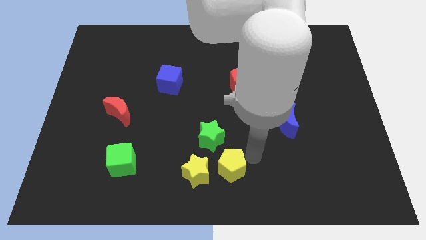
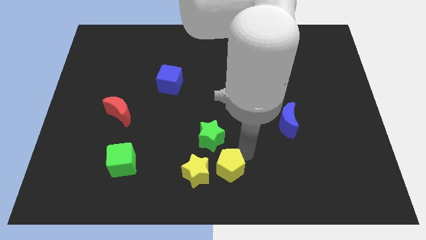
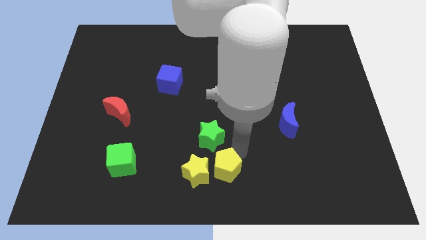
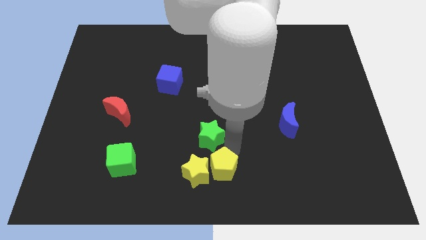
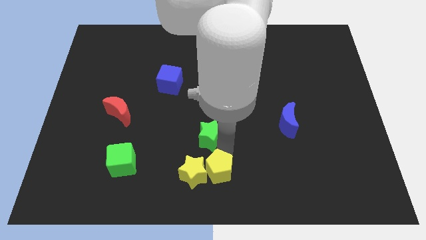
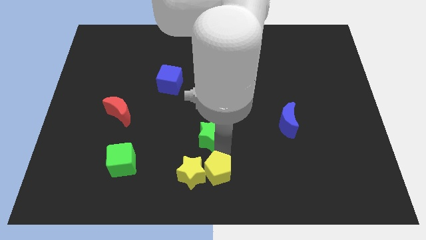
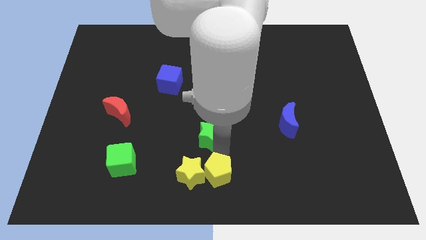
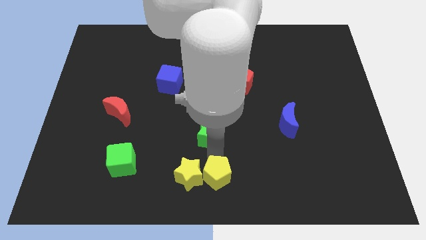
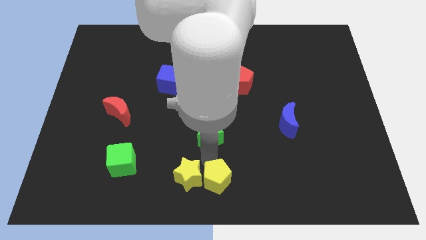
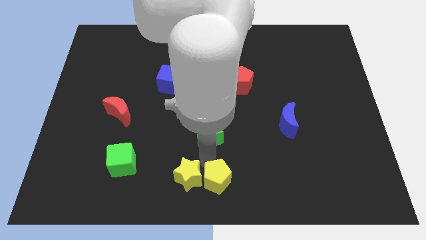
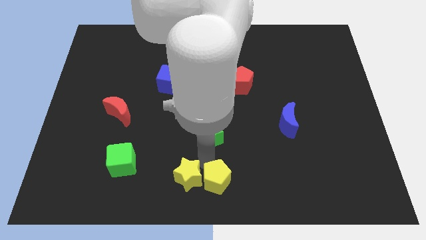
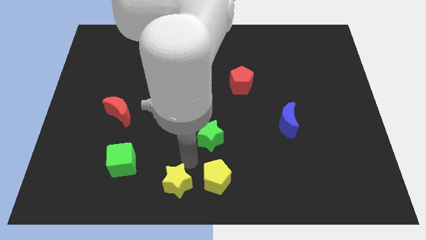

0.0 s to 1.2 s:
move the yellow pentagon into the yellow star

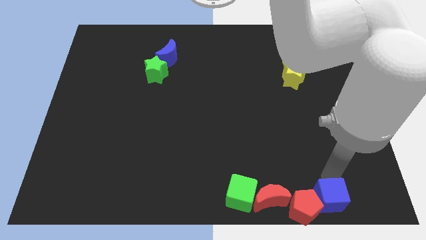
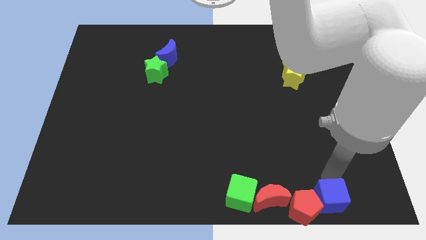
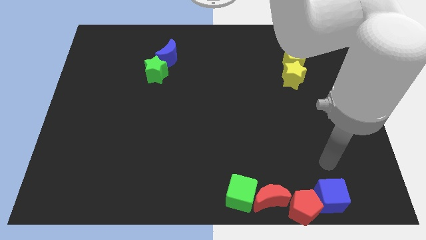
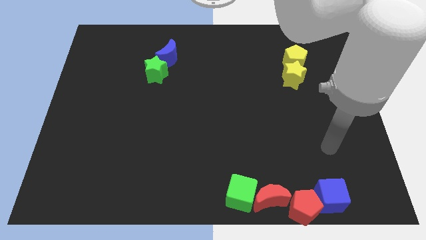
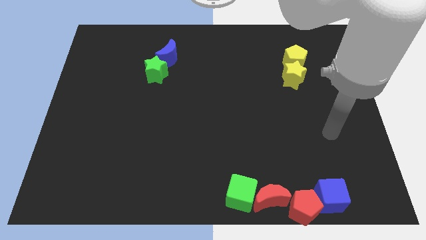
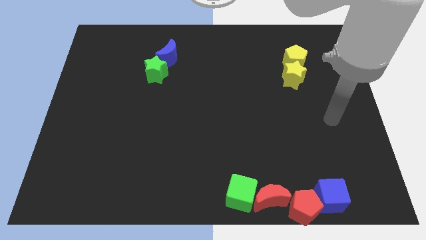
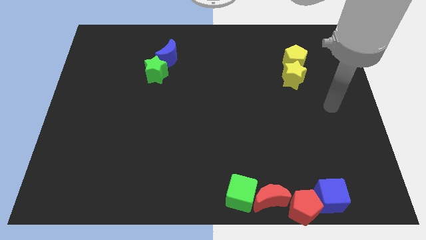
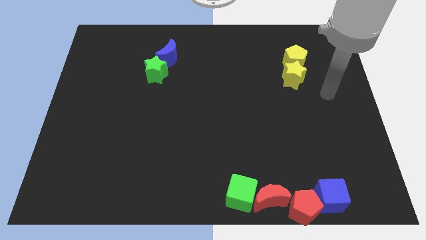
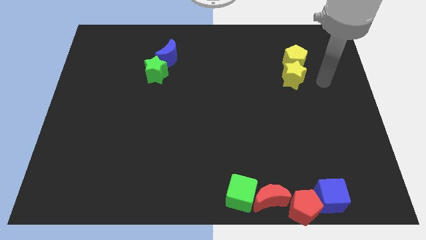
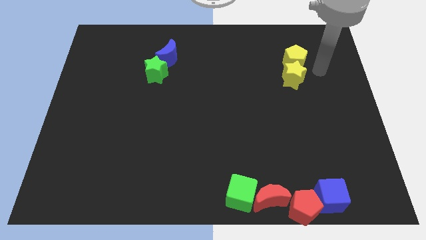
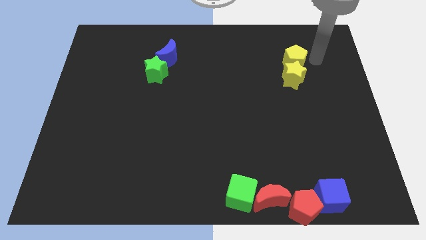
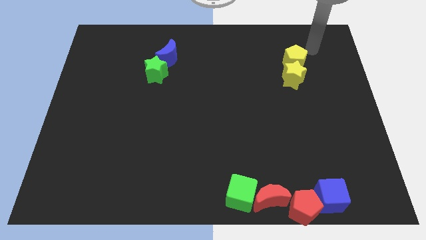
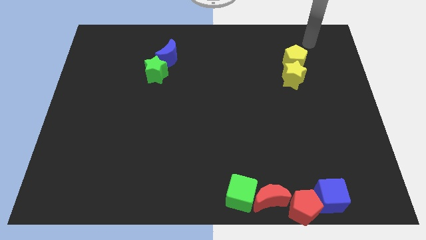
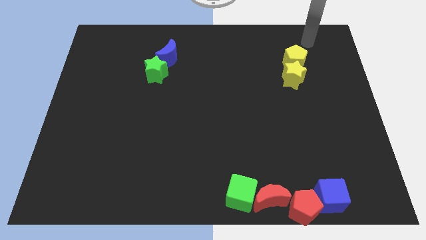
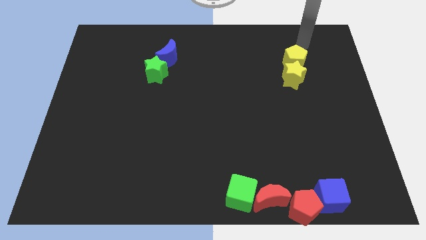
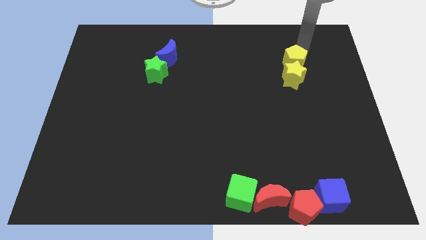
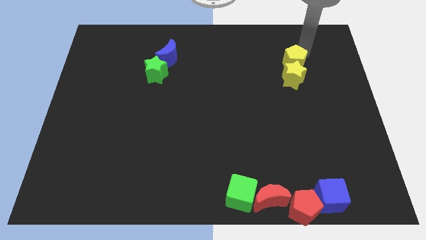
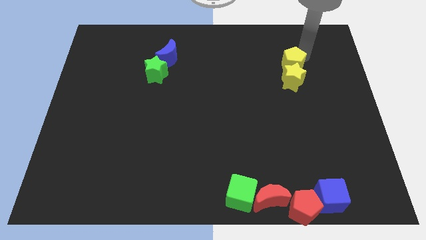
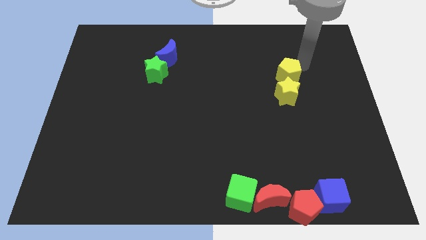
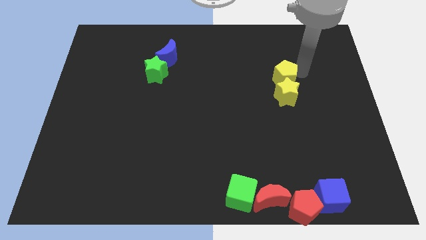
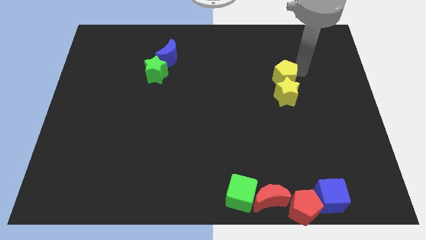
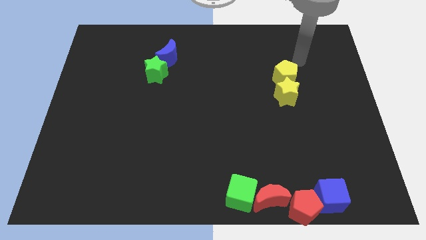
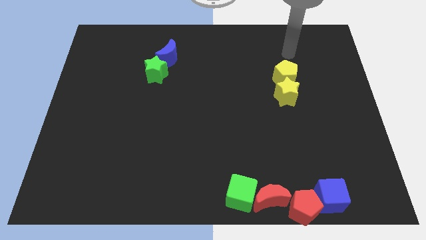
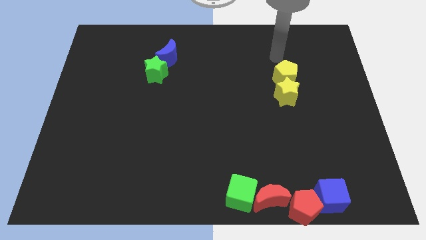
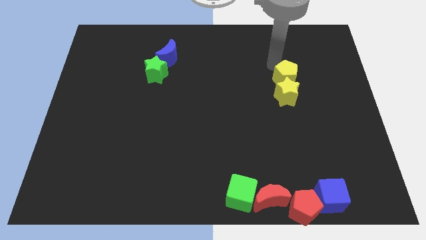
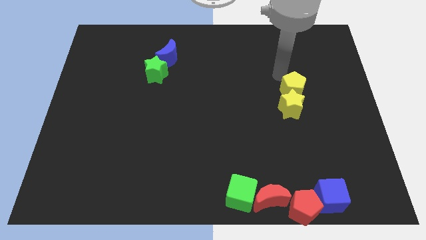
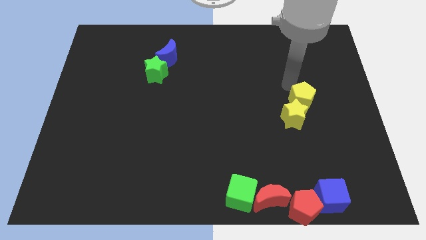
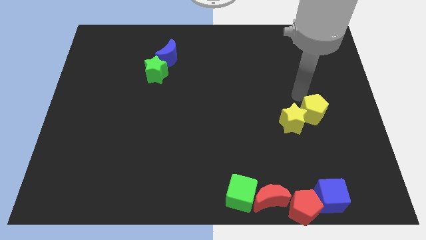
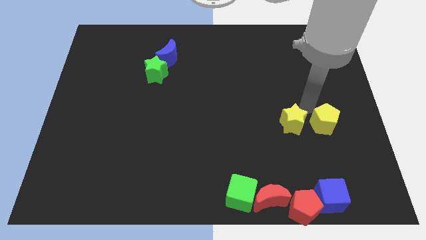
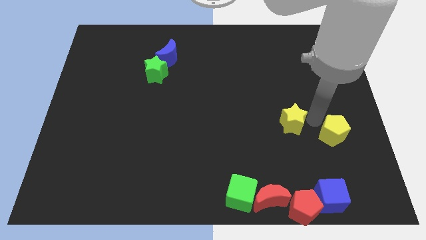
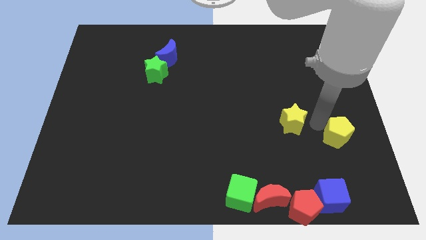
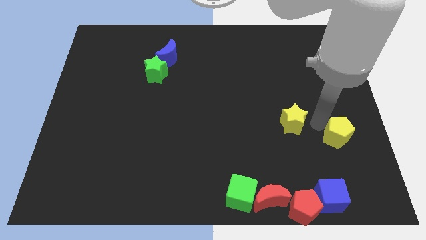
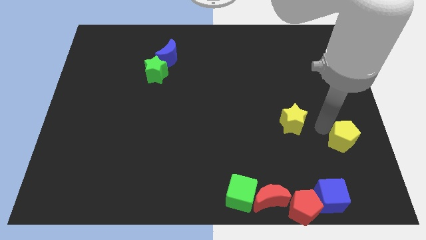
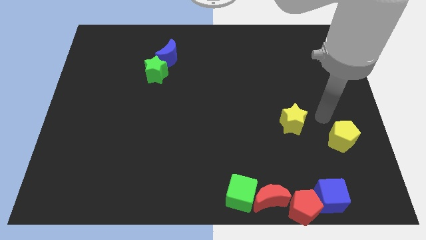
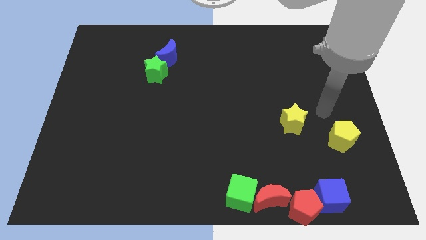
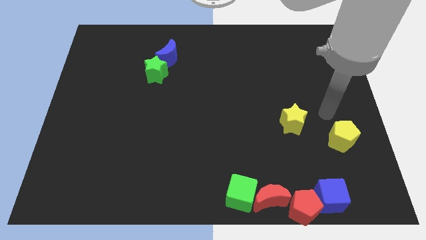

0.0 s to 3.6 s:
separate the yellow blocks

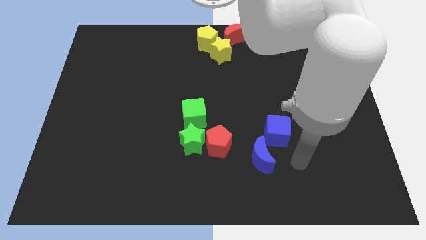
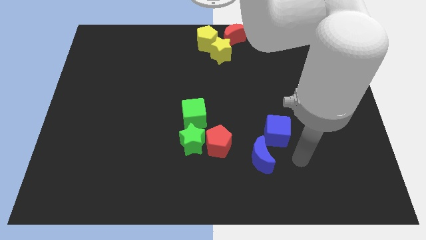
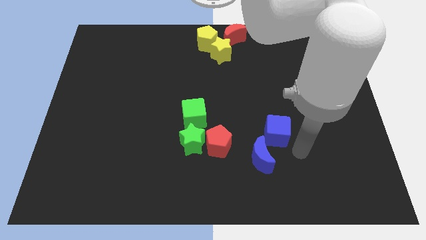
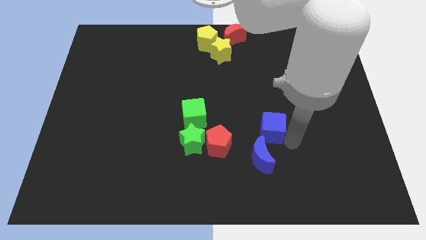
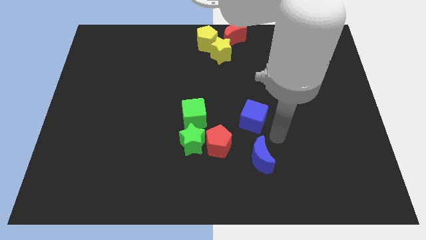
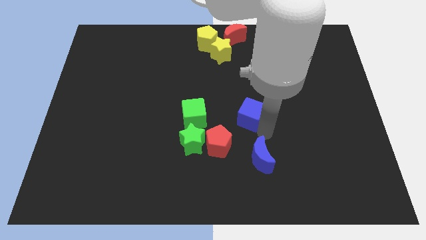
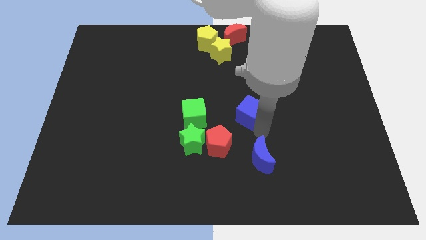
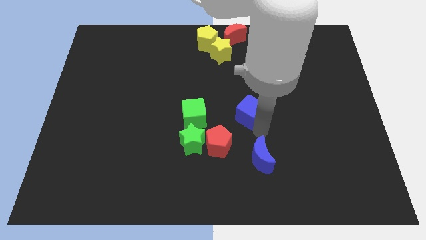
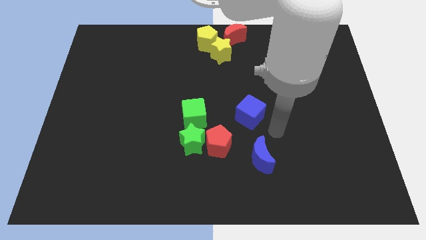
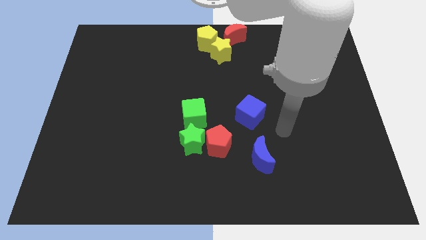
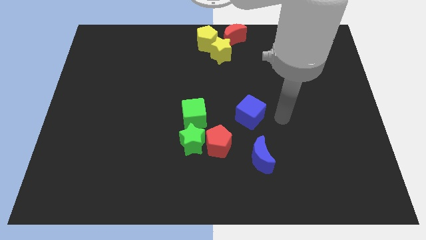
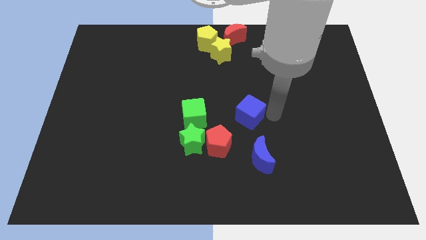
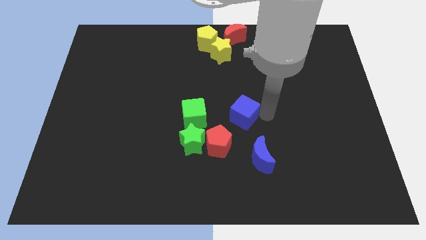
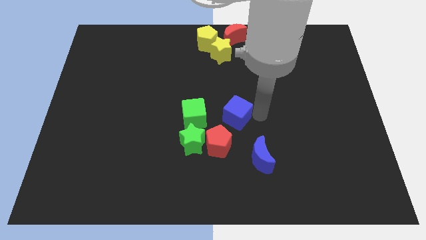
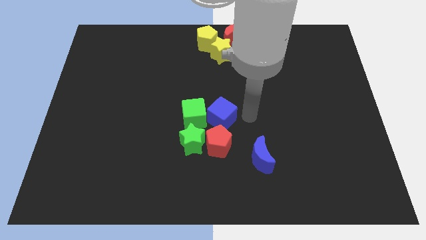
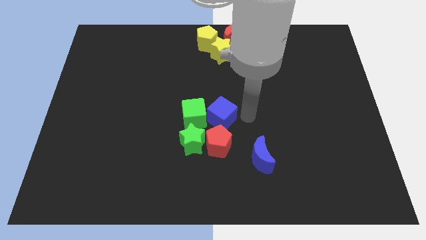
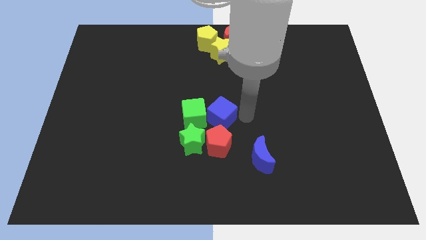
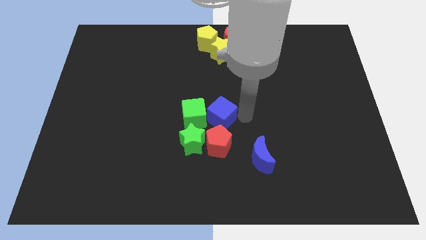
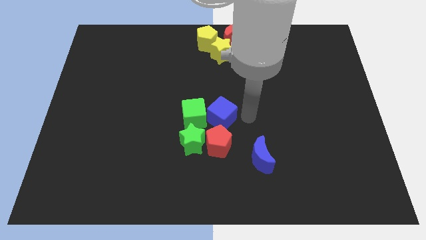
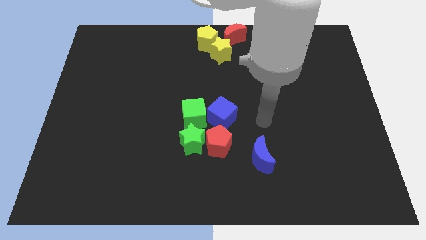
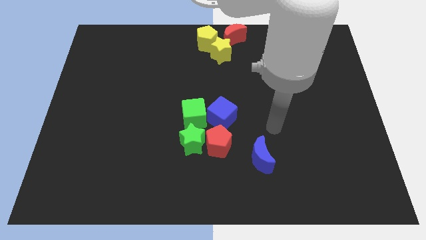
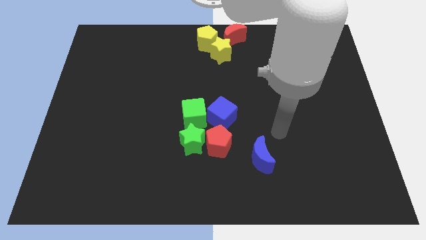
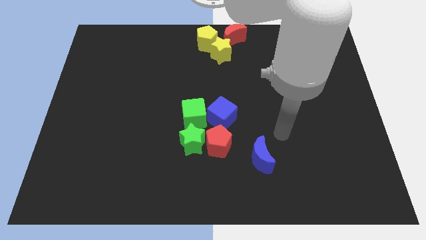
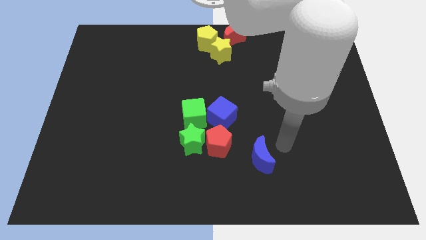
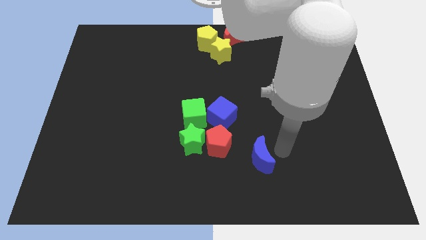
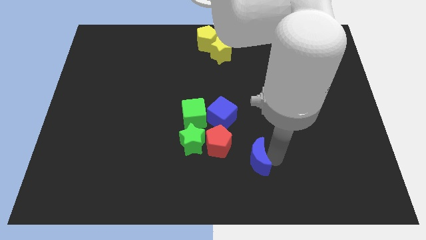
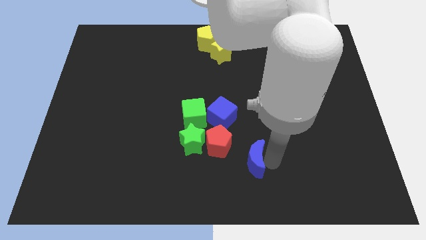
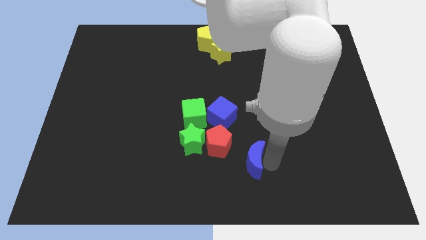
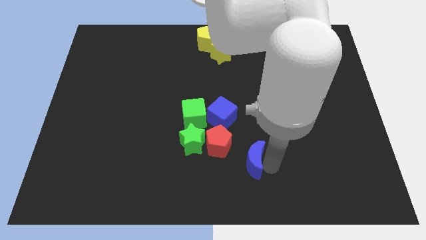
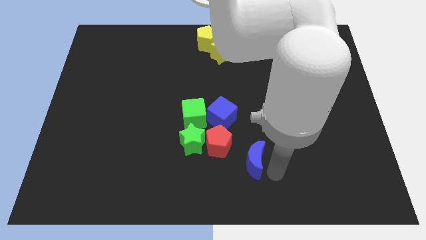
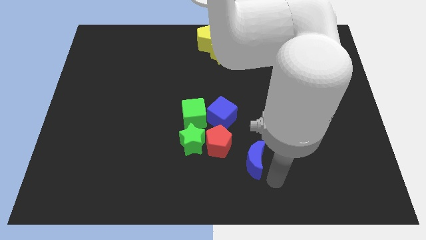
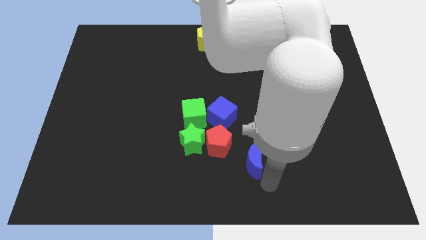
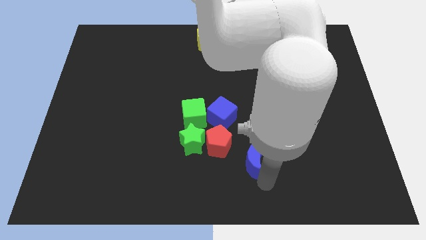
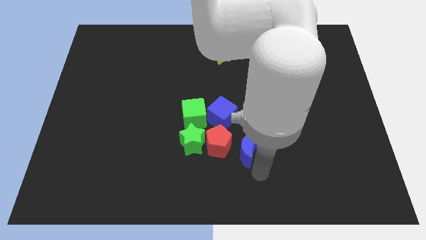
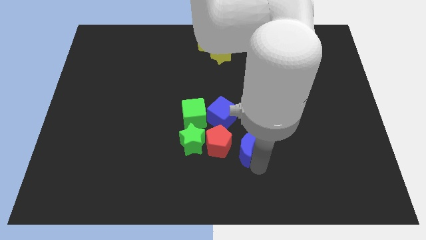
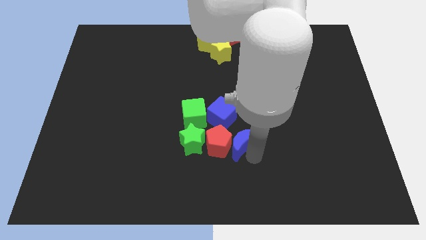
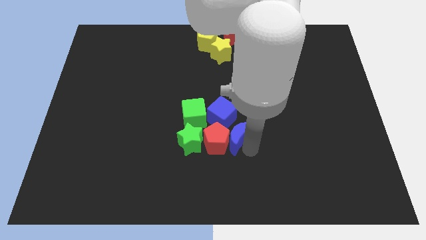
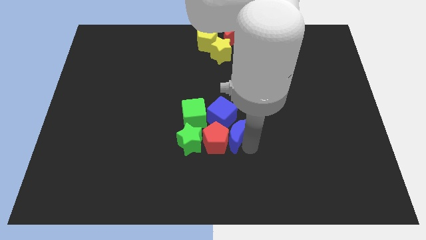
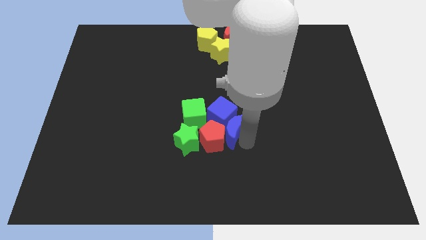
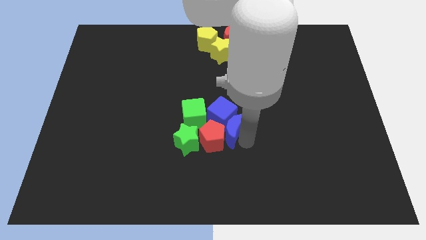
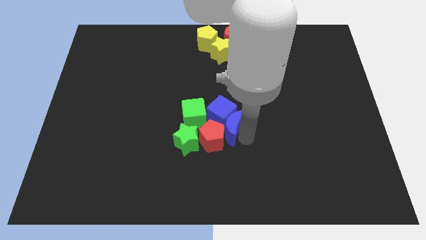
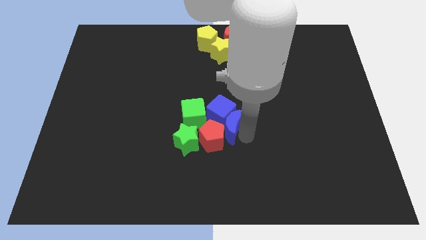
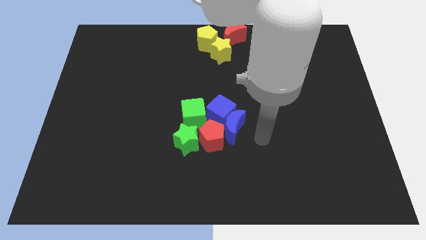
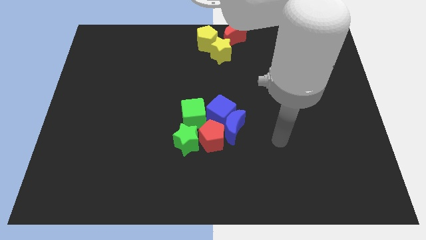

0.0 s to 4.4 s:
move the blue blocks into the red pentagon
